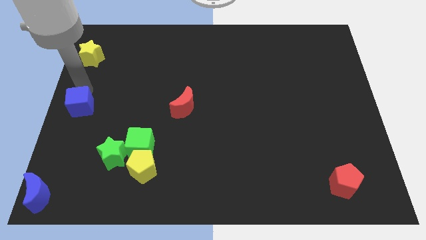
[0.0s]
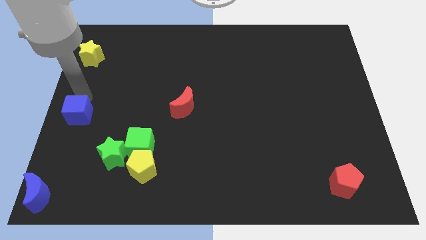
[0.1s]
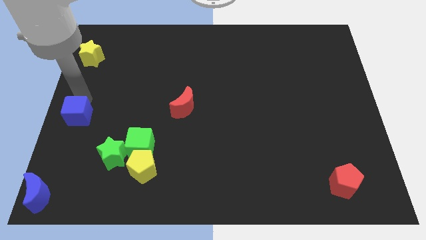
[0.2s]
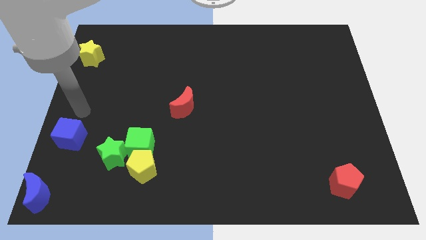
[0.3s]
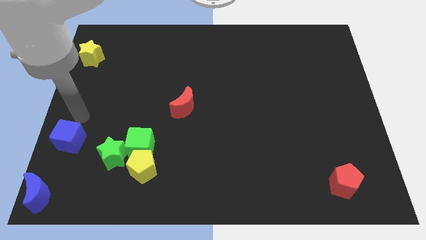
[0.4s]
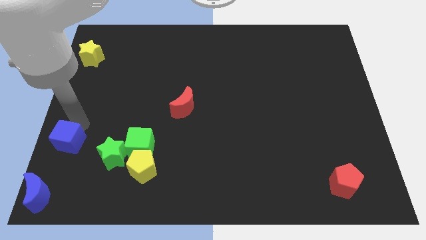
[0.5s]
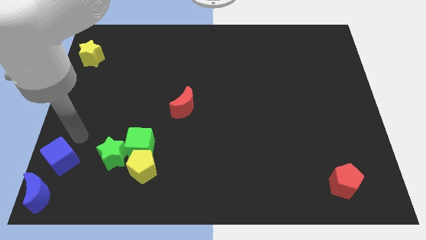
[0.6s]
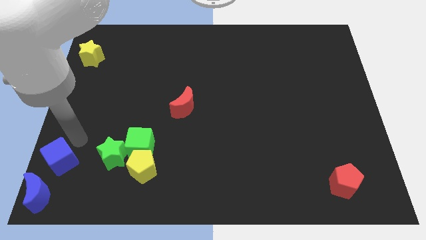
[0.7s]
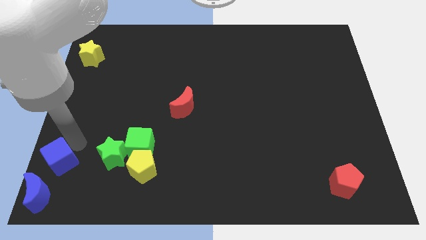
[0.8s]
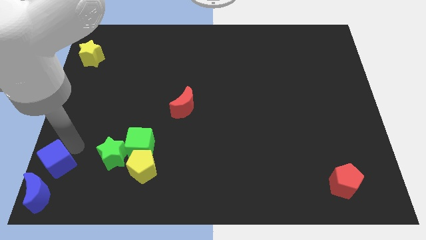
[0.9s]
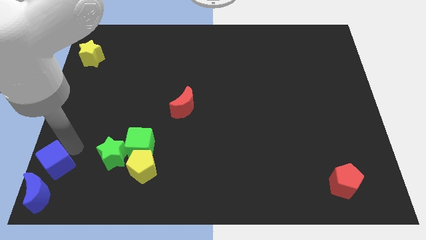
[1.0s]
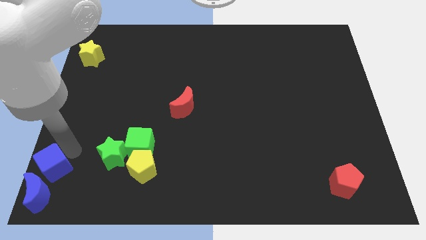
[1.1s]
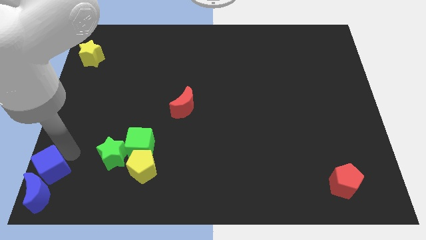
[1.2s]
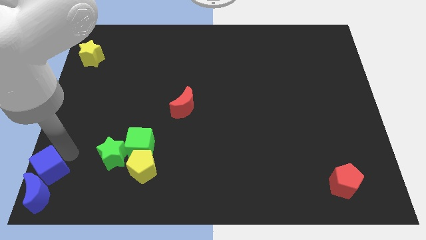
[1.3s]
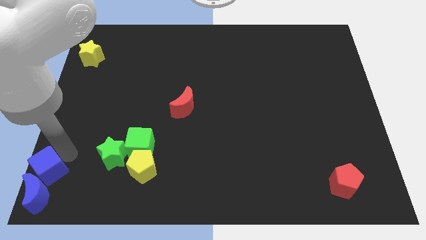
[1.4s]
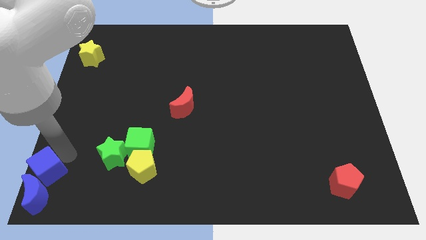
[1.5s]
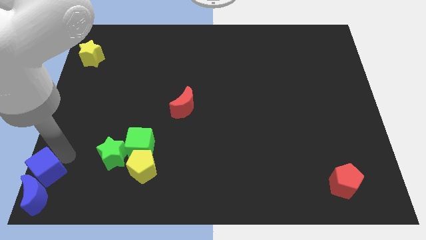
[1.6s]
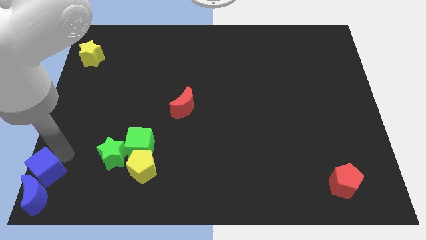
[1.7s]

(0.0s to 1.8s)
push the blue cube into the blue crescent

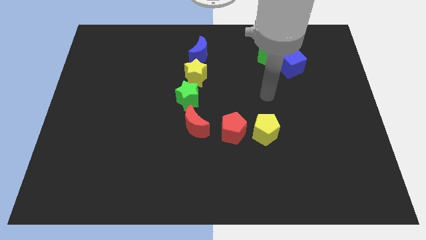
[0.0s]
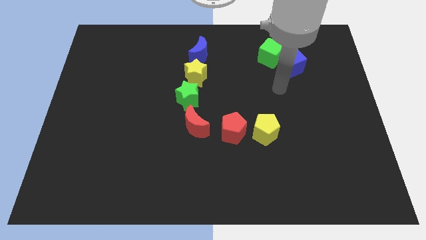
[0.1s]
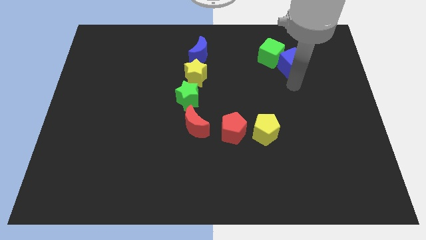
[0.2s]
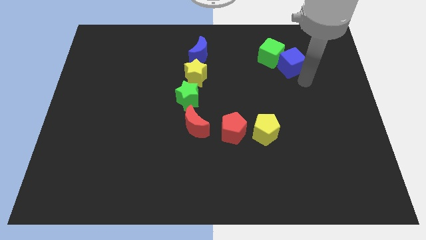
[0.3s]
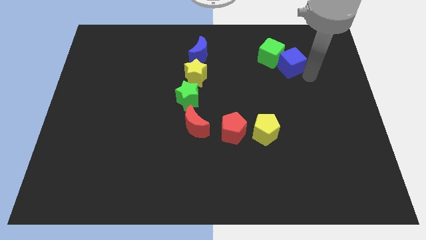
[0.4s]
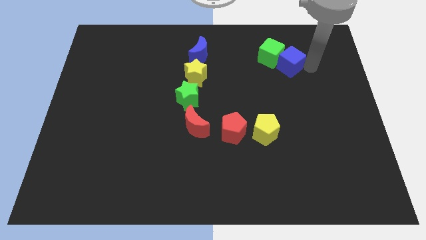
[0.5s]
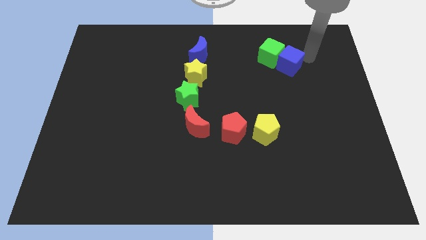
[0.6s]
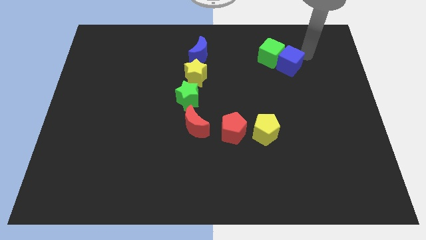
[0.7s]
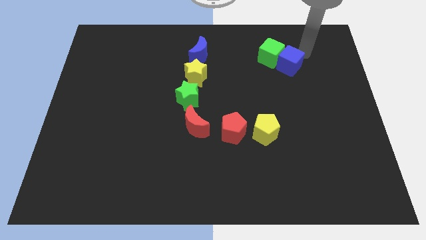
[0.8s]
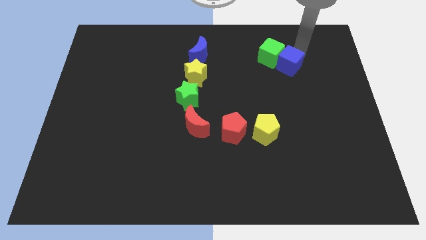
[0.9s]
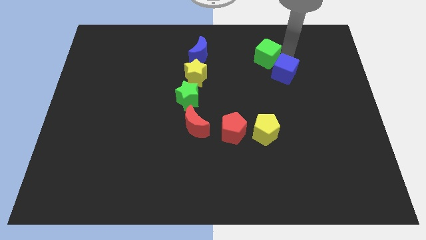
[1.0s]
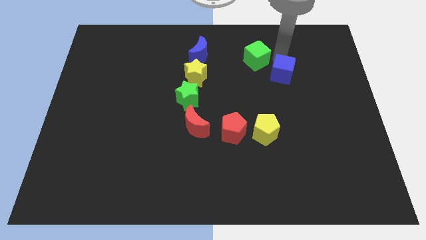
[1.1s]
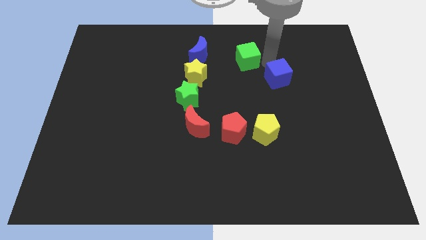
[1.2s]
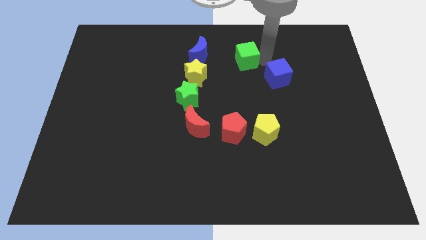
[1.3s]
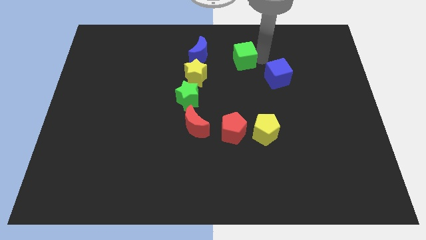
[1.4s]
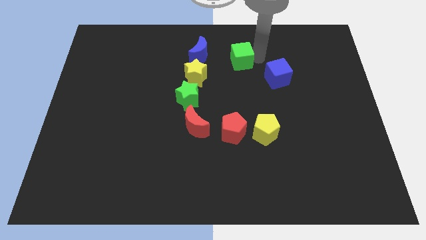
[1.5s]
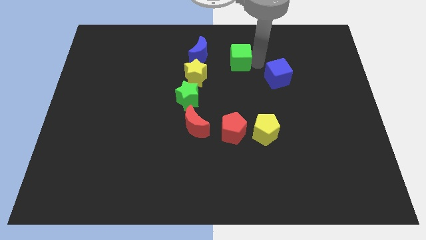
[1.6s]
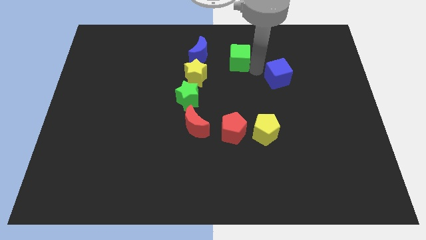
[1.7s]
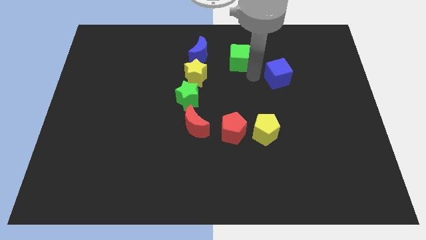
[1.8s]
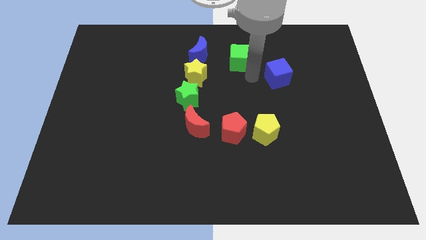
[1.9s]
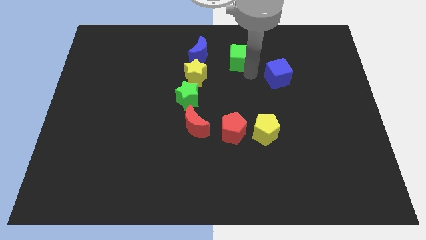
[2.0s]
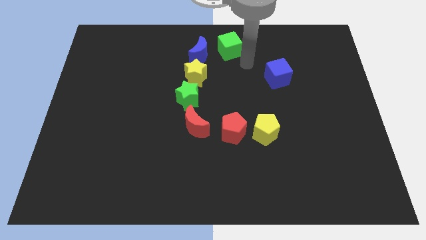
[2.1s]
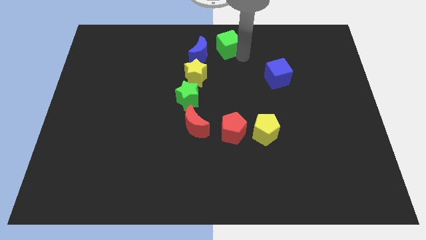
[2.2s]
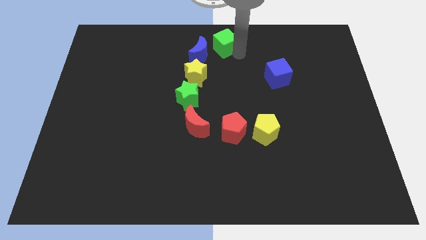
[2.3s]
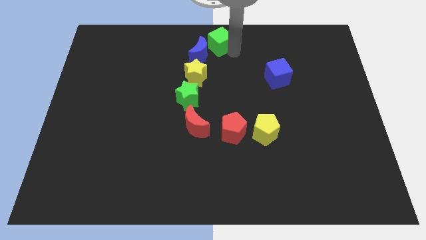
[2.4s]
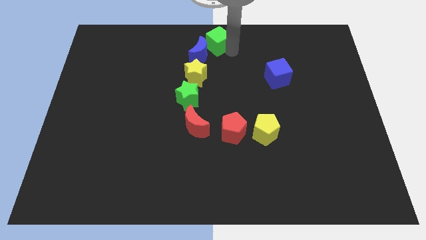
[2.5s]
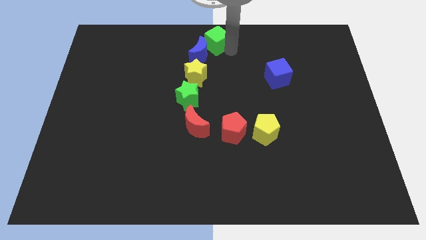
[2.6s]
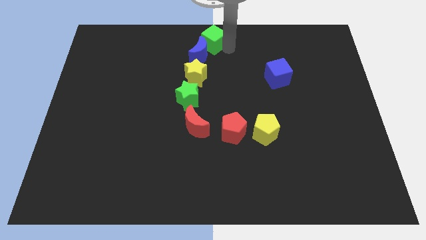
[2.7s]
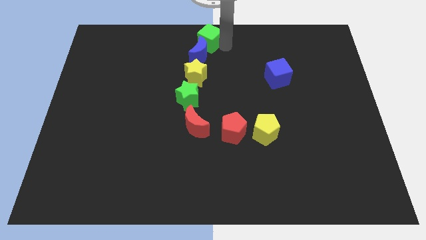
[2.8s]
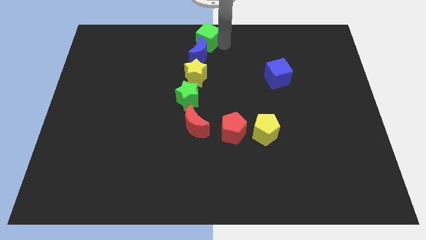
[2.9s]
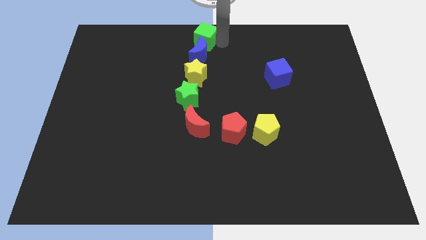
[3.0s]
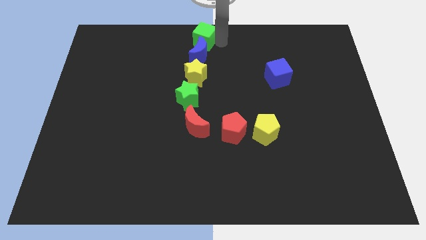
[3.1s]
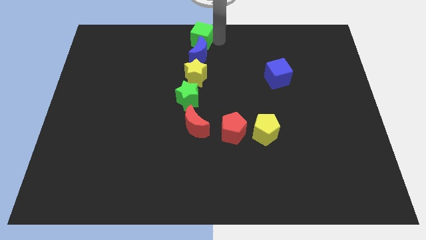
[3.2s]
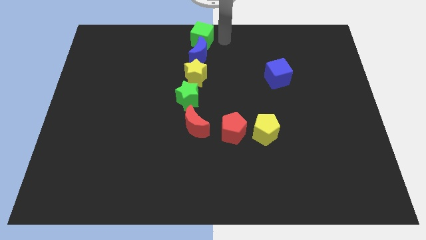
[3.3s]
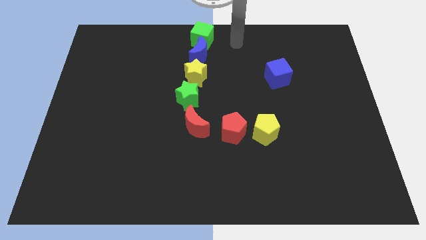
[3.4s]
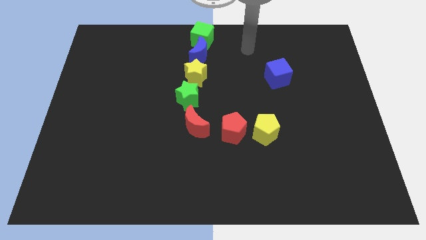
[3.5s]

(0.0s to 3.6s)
move the green cube above the blue crescent

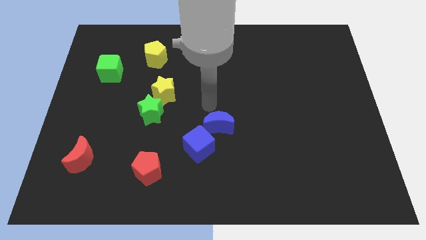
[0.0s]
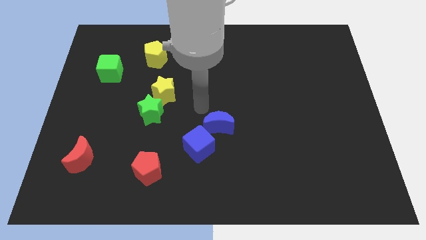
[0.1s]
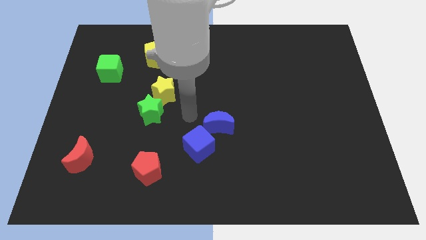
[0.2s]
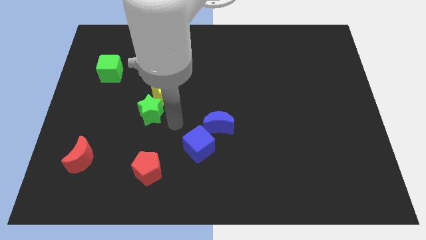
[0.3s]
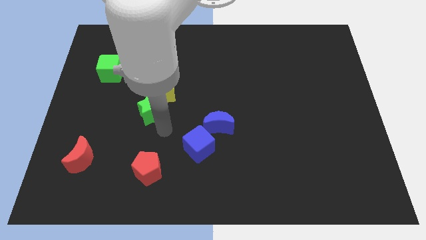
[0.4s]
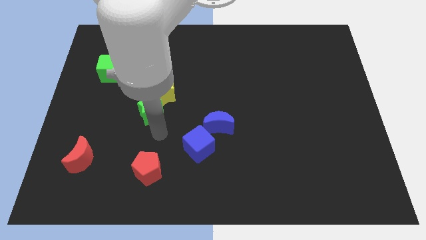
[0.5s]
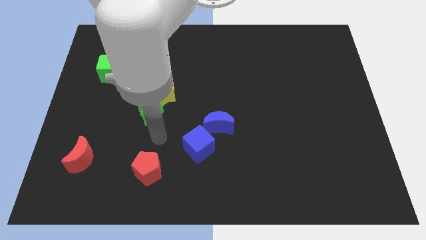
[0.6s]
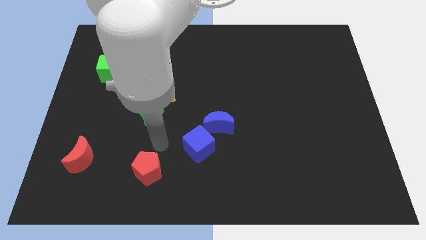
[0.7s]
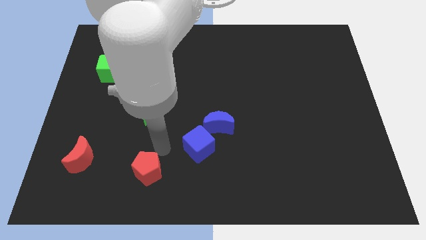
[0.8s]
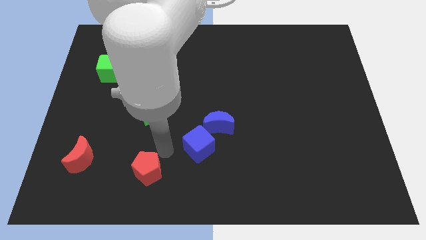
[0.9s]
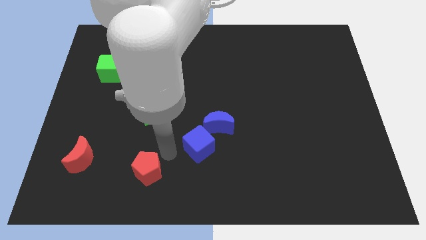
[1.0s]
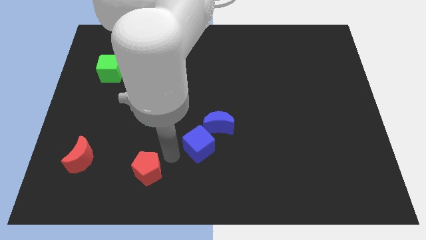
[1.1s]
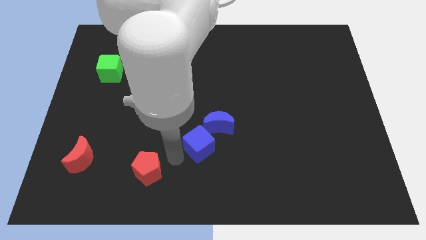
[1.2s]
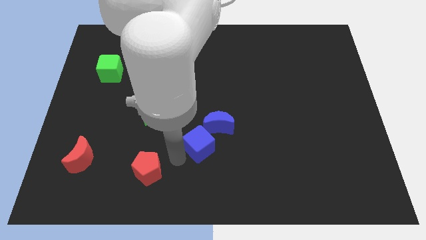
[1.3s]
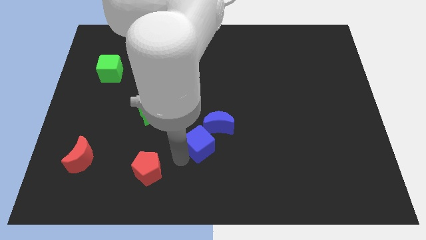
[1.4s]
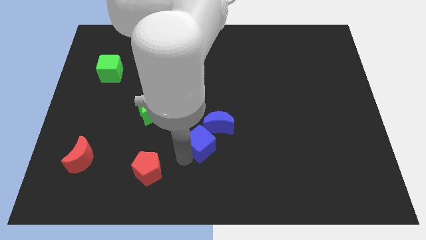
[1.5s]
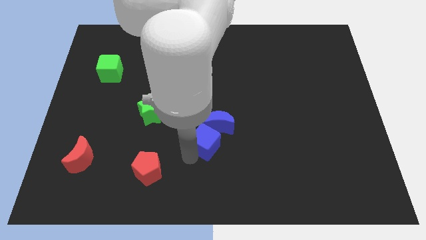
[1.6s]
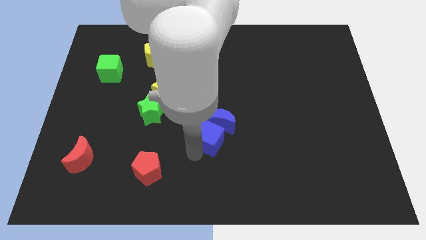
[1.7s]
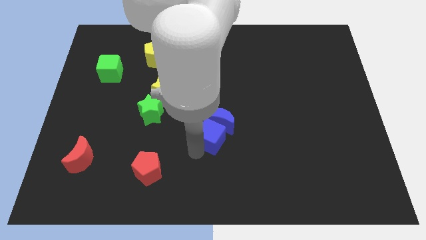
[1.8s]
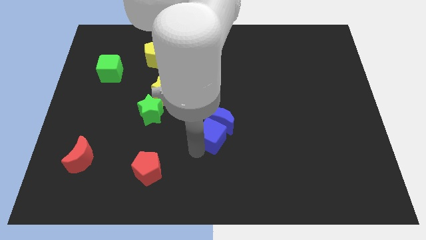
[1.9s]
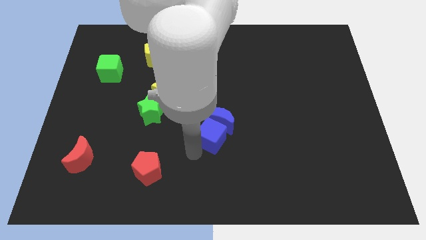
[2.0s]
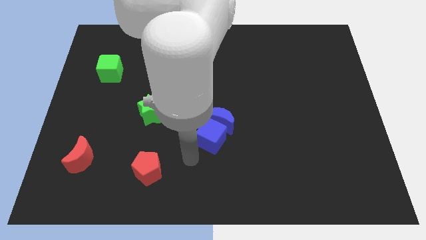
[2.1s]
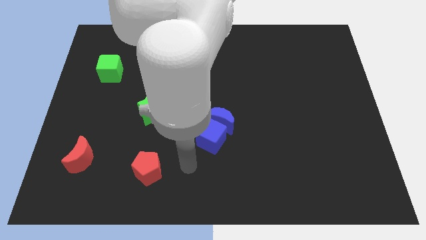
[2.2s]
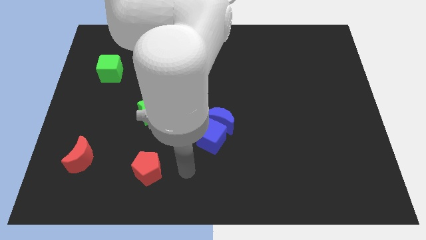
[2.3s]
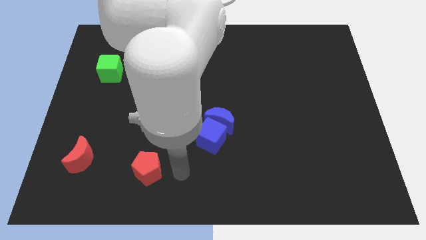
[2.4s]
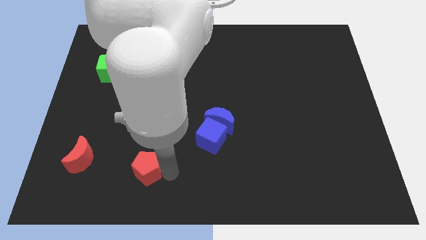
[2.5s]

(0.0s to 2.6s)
push the blue cube into the blue moon

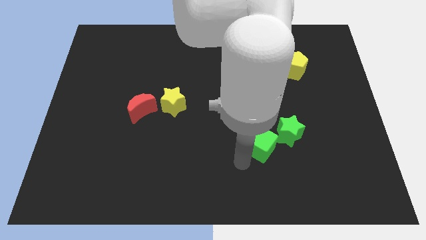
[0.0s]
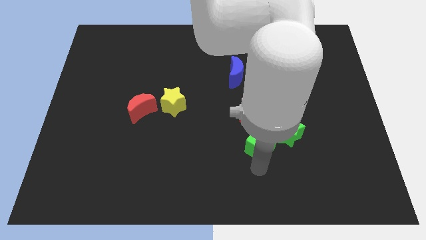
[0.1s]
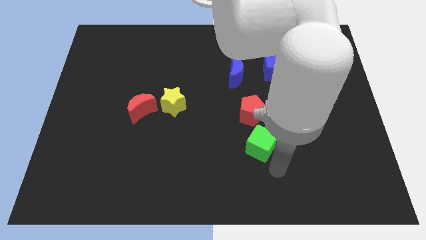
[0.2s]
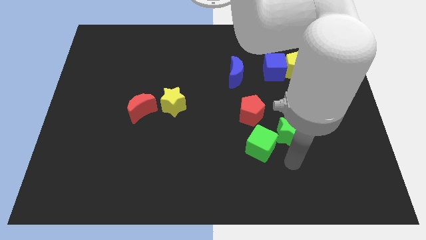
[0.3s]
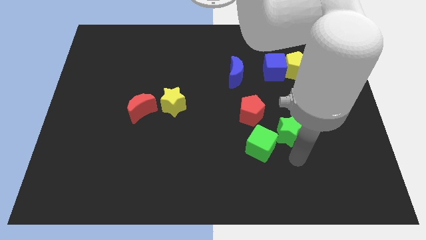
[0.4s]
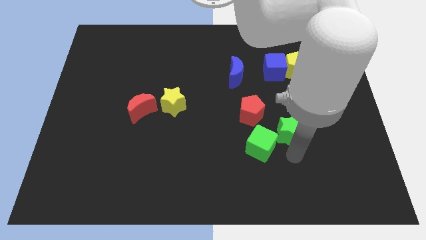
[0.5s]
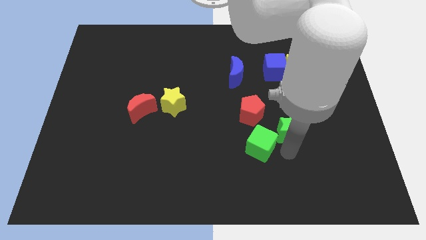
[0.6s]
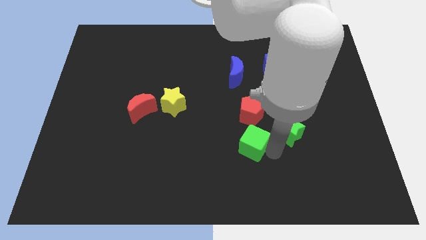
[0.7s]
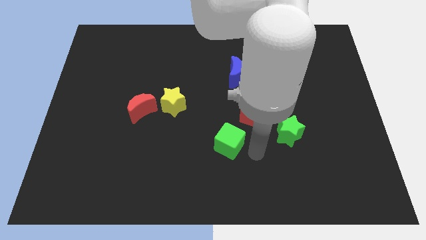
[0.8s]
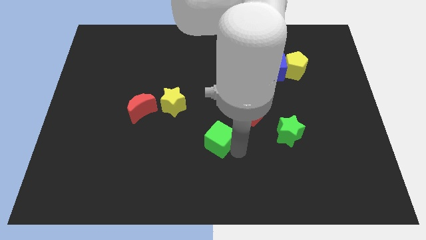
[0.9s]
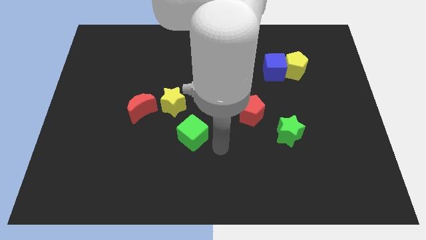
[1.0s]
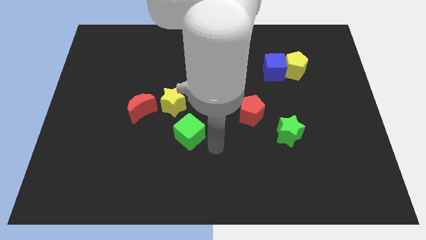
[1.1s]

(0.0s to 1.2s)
push the green cube towards the yellow star
